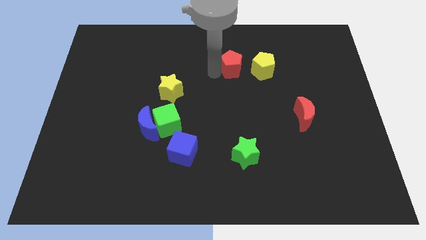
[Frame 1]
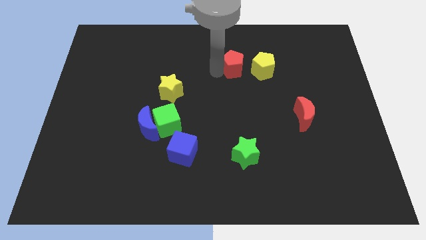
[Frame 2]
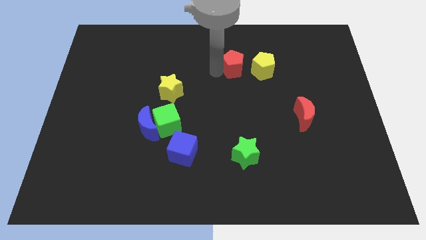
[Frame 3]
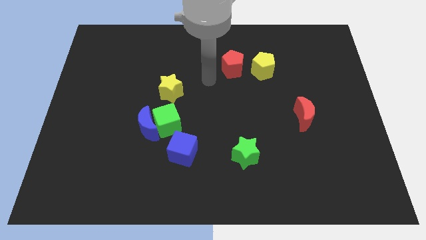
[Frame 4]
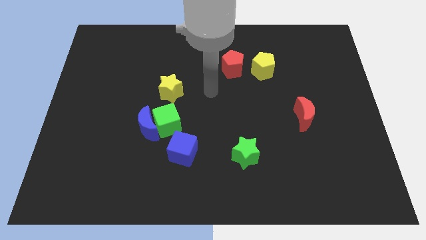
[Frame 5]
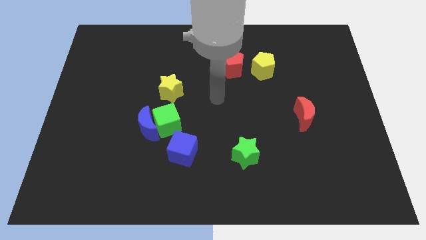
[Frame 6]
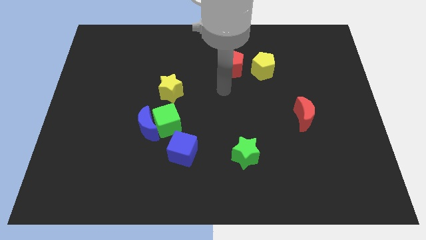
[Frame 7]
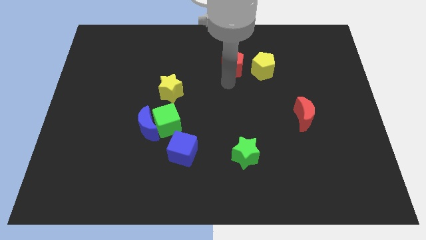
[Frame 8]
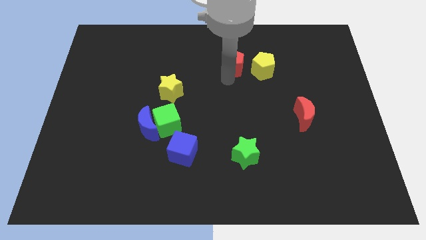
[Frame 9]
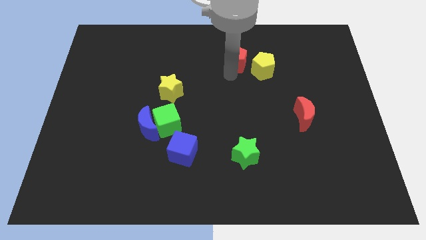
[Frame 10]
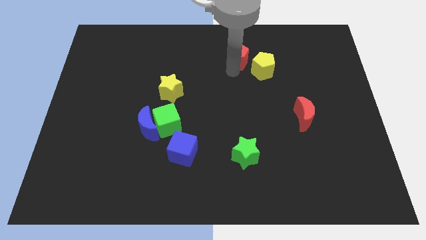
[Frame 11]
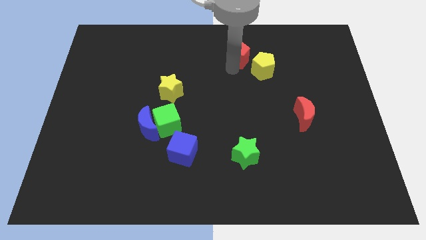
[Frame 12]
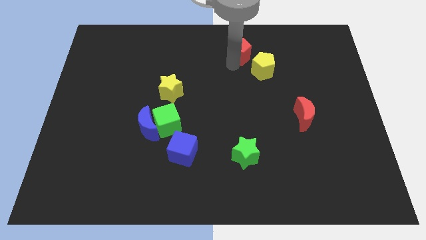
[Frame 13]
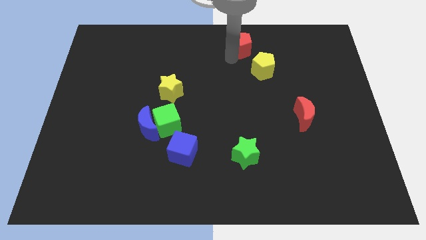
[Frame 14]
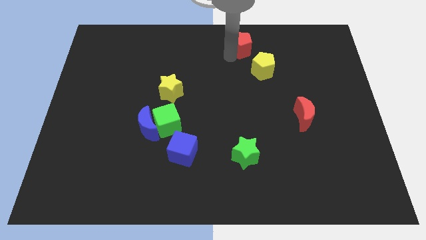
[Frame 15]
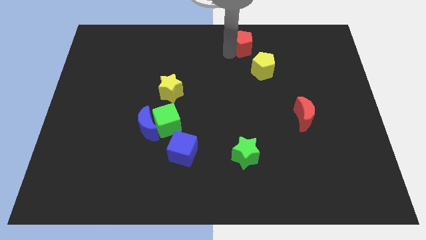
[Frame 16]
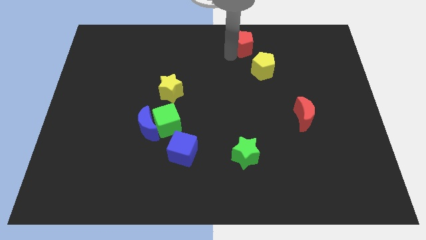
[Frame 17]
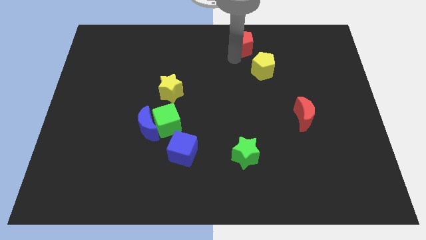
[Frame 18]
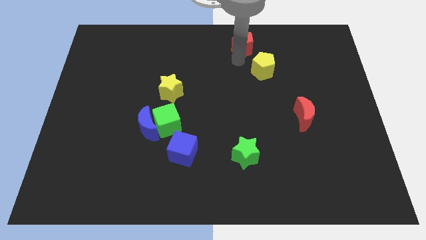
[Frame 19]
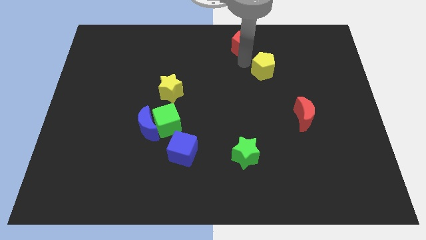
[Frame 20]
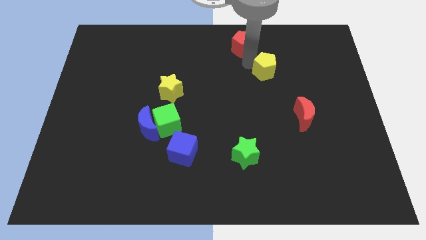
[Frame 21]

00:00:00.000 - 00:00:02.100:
move red pentagon towards top center

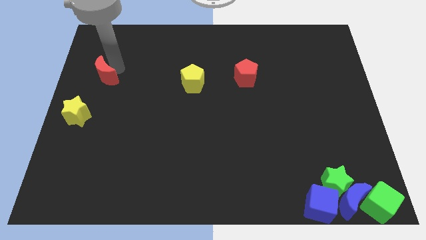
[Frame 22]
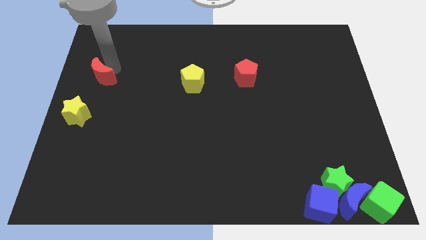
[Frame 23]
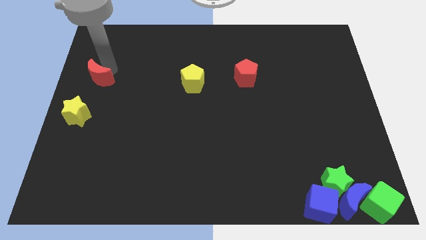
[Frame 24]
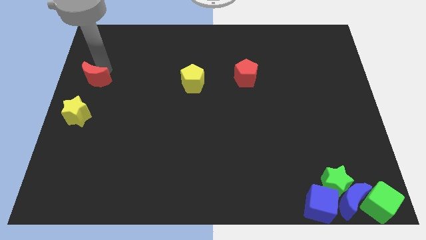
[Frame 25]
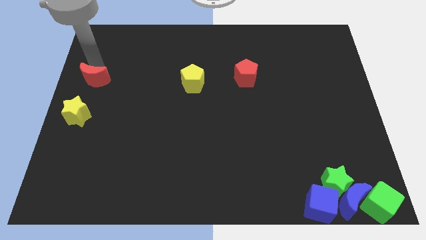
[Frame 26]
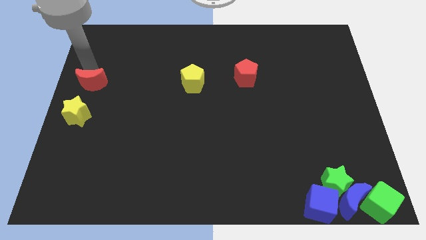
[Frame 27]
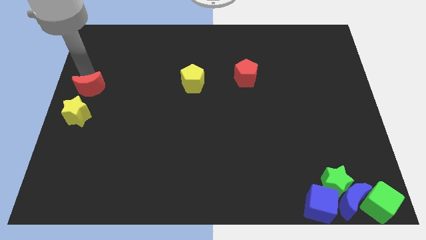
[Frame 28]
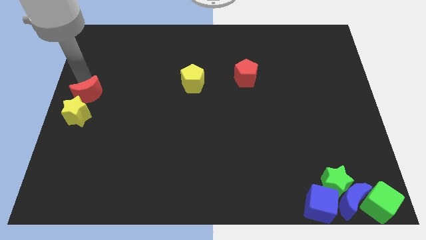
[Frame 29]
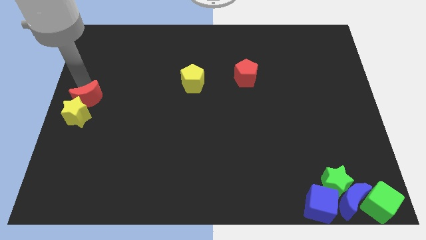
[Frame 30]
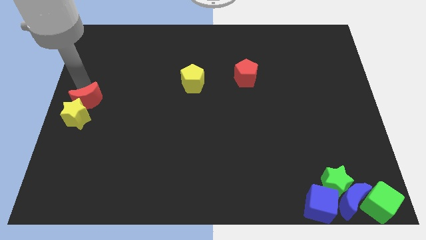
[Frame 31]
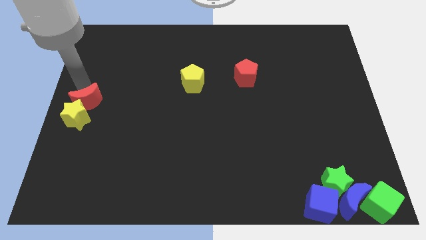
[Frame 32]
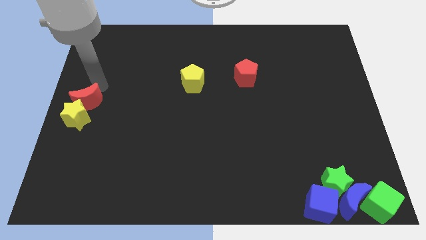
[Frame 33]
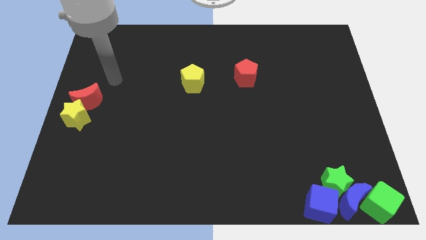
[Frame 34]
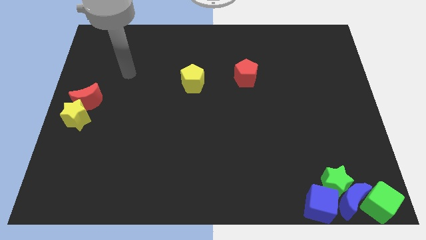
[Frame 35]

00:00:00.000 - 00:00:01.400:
place red moon to the top of yellow star

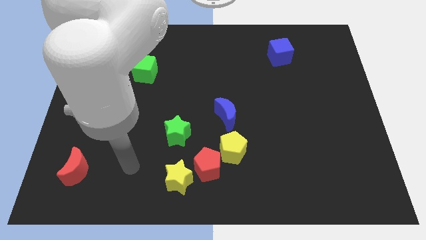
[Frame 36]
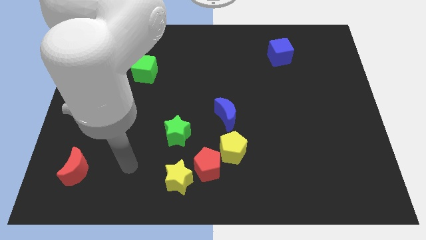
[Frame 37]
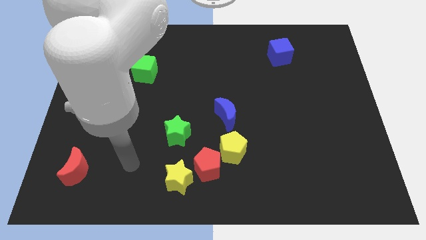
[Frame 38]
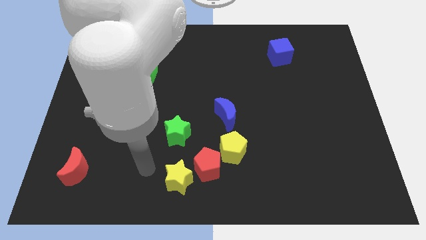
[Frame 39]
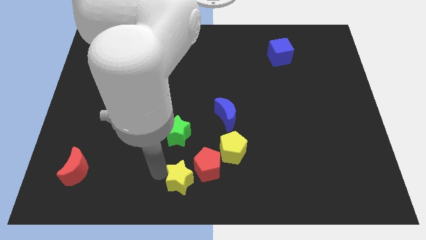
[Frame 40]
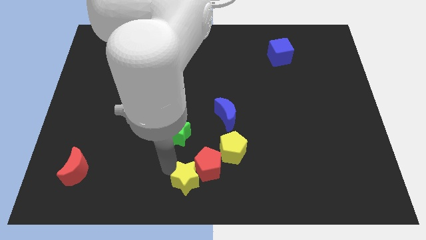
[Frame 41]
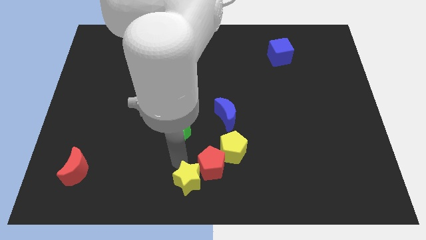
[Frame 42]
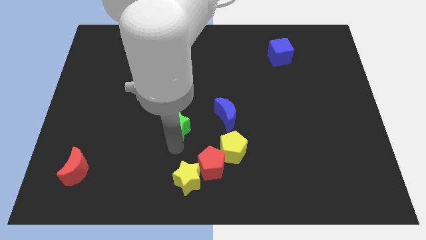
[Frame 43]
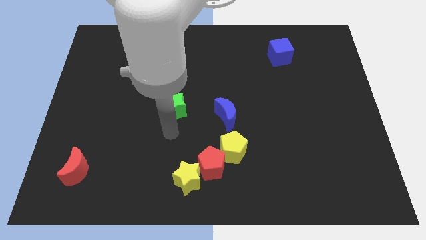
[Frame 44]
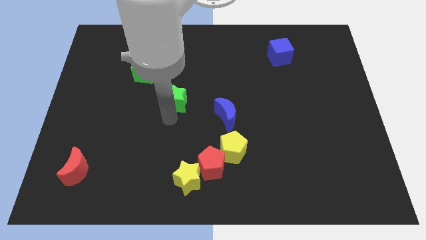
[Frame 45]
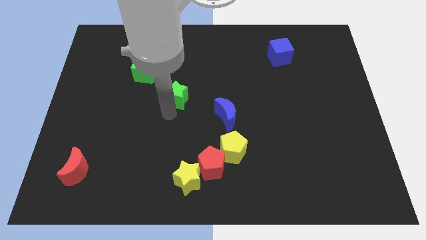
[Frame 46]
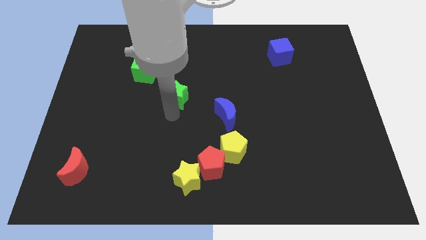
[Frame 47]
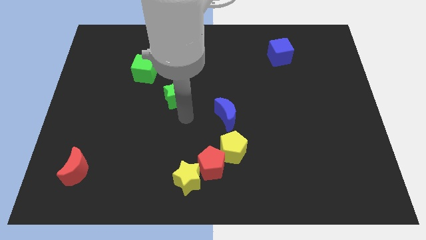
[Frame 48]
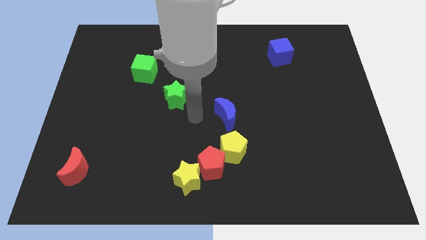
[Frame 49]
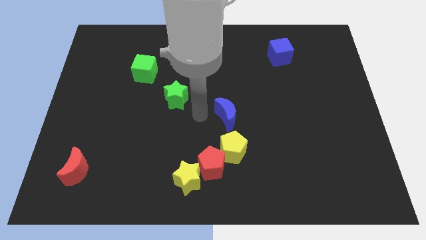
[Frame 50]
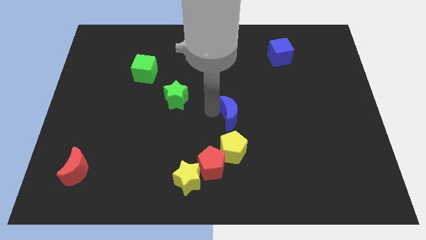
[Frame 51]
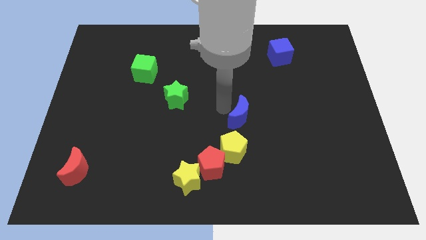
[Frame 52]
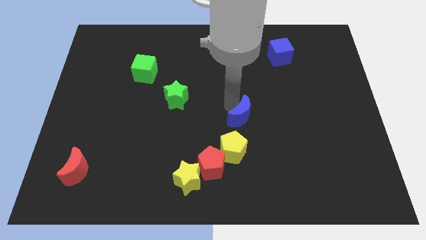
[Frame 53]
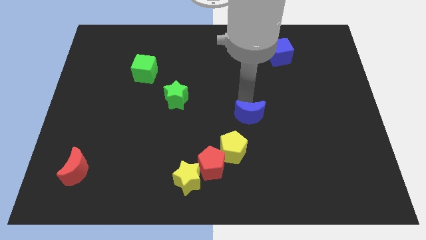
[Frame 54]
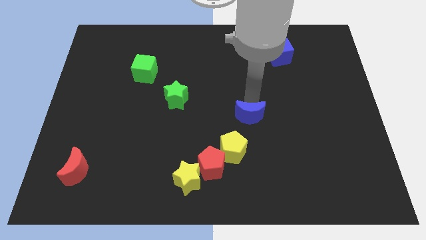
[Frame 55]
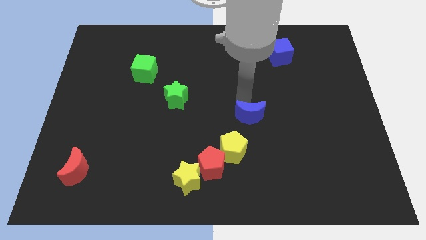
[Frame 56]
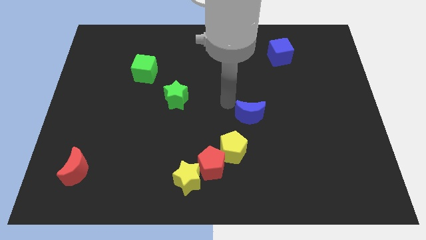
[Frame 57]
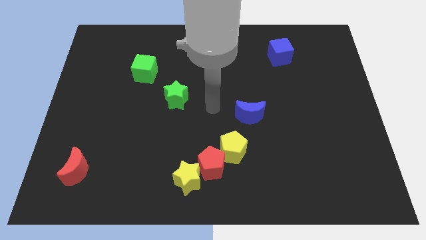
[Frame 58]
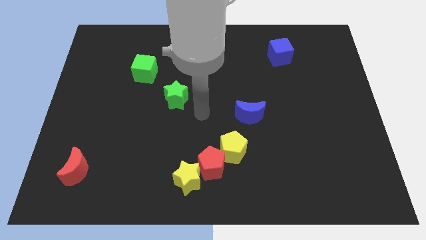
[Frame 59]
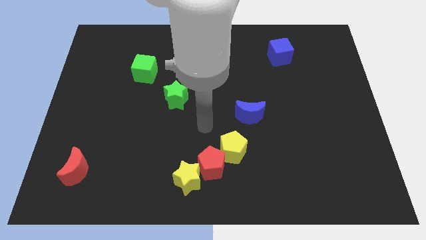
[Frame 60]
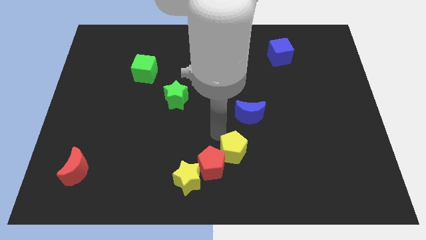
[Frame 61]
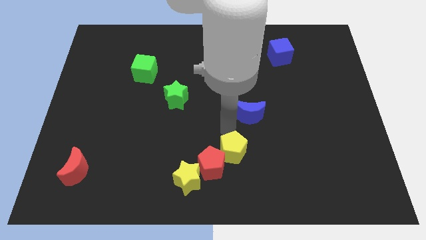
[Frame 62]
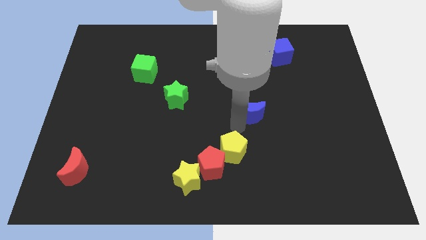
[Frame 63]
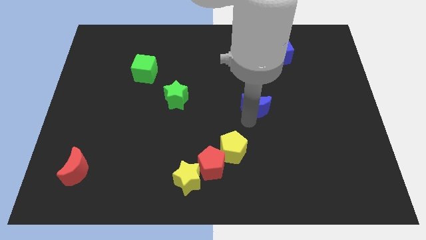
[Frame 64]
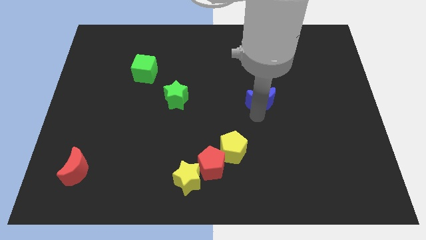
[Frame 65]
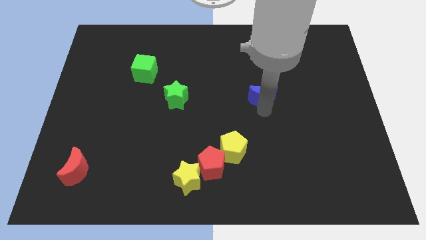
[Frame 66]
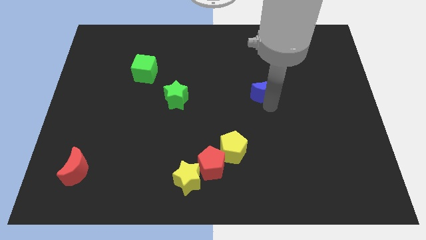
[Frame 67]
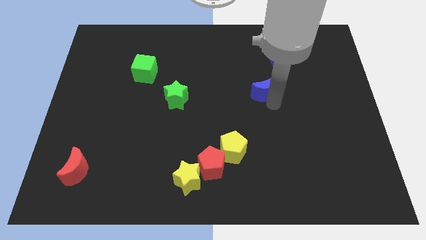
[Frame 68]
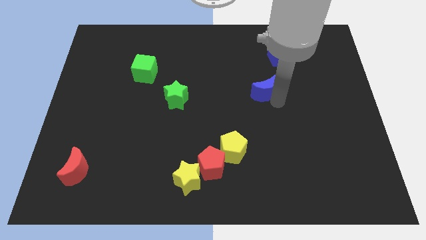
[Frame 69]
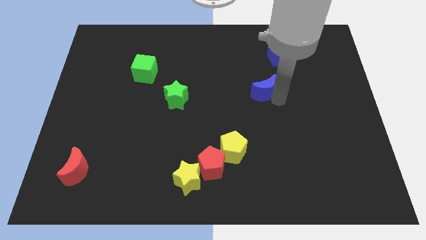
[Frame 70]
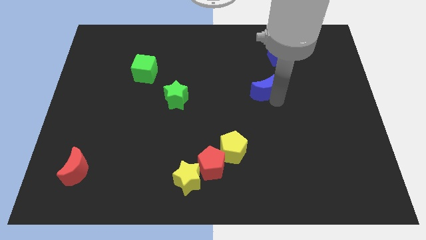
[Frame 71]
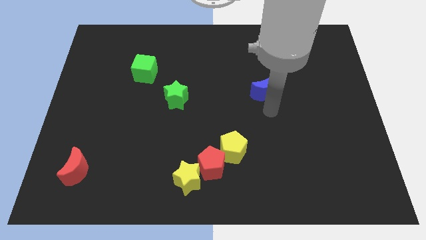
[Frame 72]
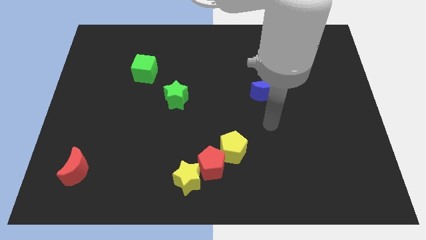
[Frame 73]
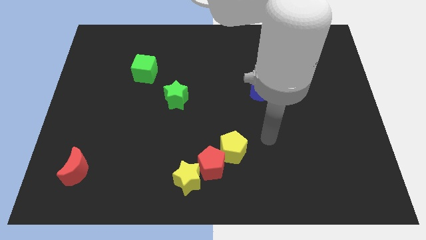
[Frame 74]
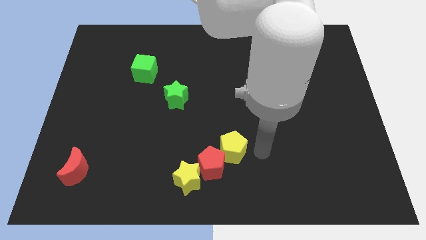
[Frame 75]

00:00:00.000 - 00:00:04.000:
push blue moon to the top

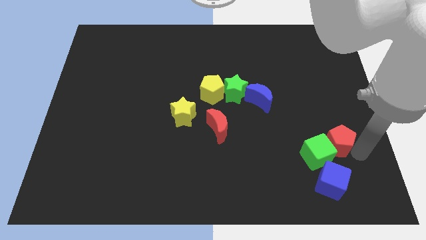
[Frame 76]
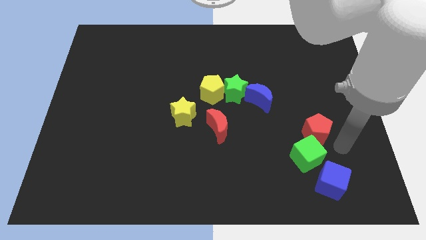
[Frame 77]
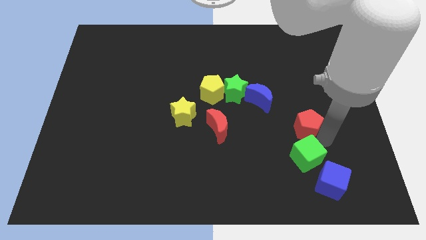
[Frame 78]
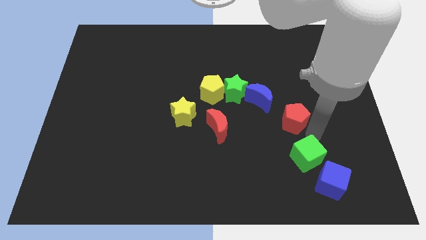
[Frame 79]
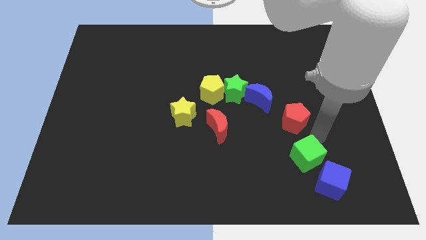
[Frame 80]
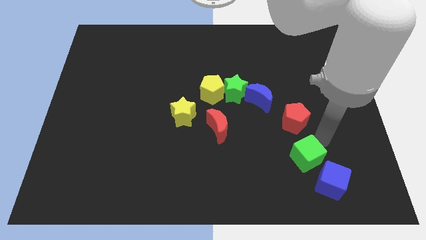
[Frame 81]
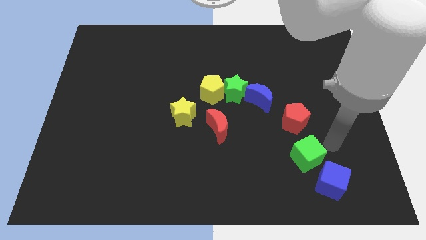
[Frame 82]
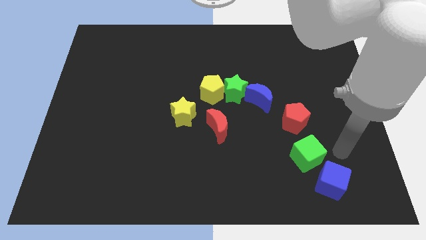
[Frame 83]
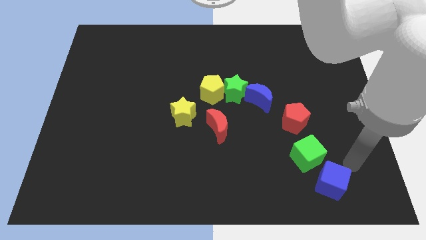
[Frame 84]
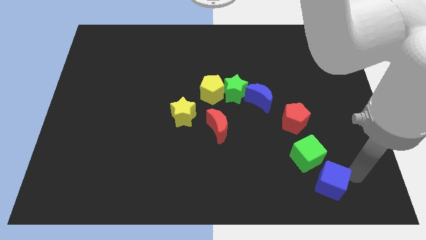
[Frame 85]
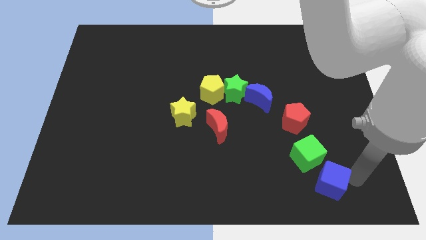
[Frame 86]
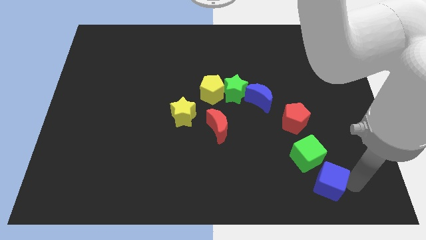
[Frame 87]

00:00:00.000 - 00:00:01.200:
place the red pentagon to the top of the green cube

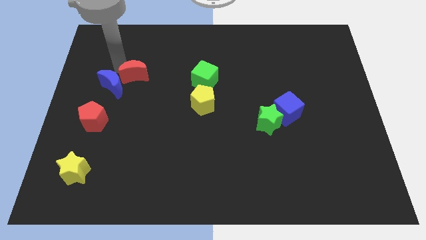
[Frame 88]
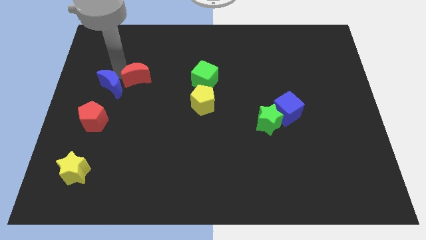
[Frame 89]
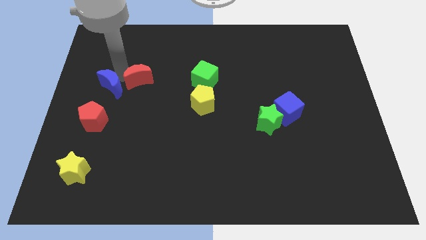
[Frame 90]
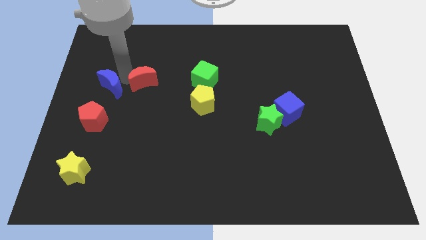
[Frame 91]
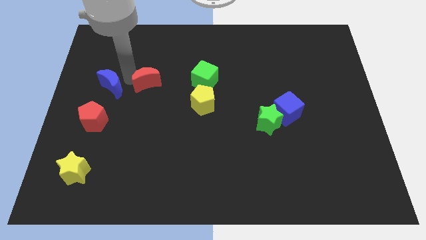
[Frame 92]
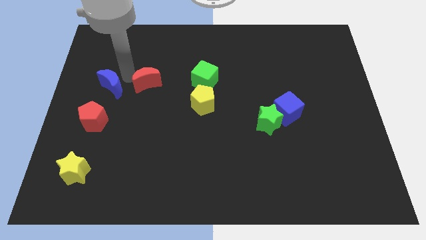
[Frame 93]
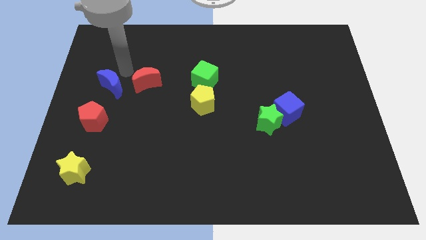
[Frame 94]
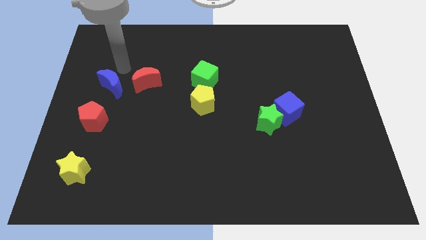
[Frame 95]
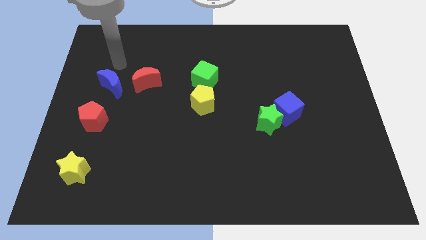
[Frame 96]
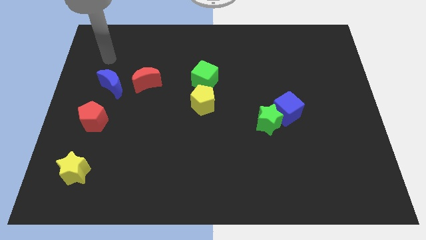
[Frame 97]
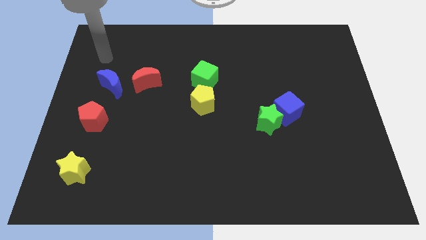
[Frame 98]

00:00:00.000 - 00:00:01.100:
separate the red moon from the blue moon
